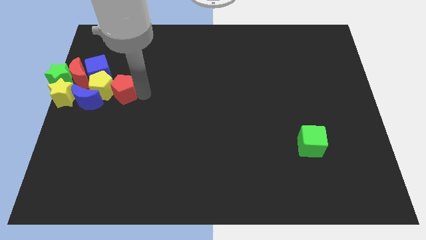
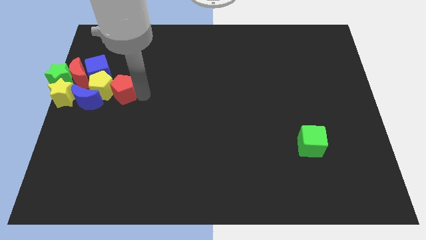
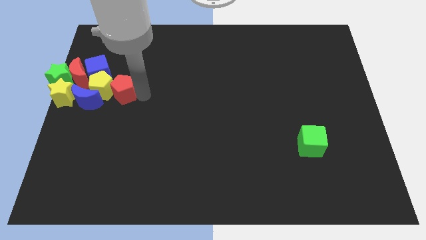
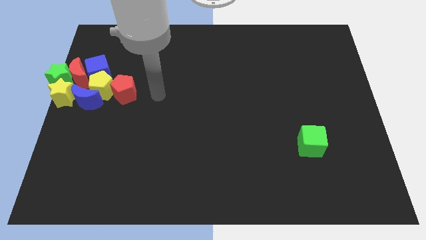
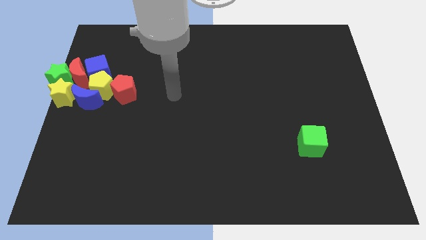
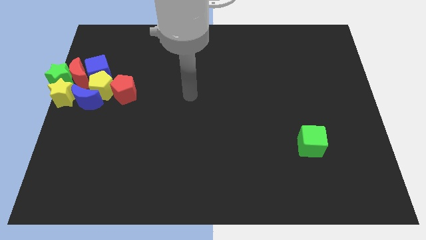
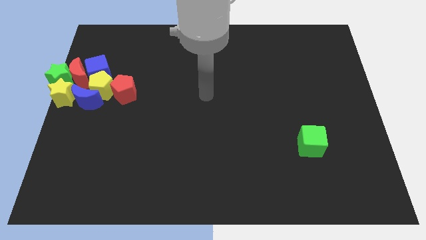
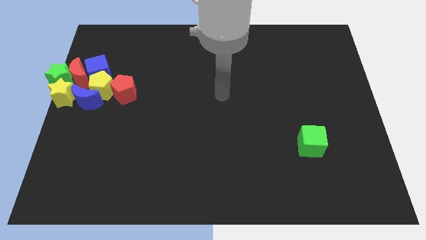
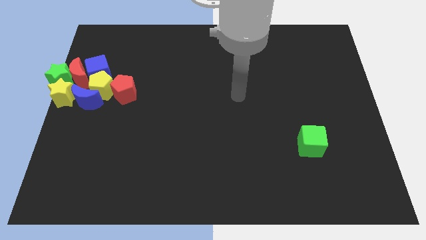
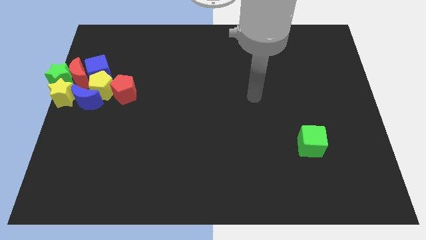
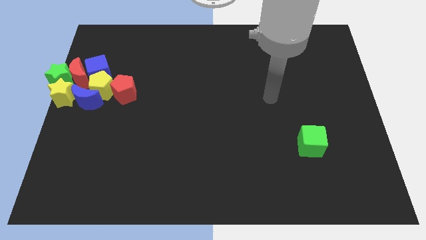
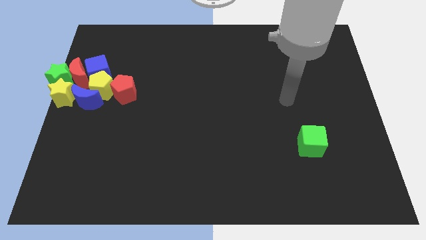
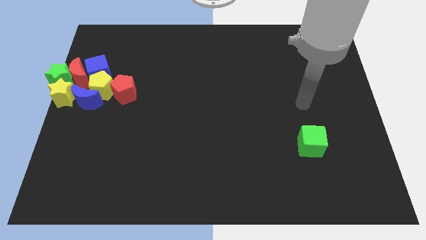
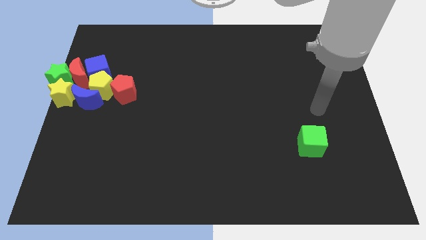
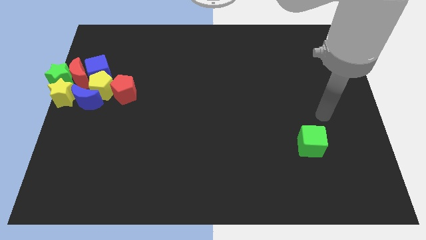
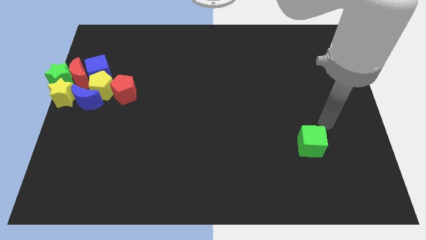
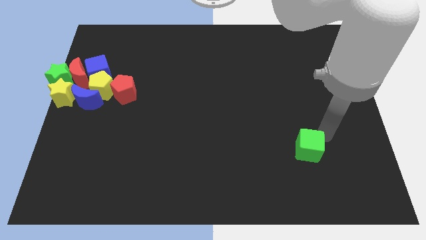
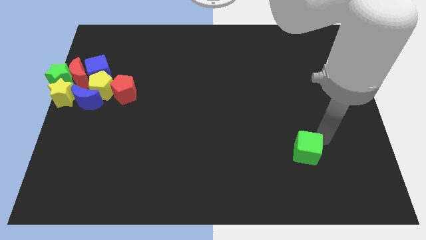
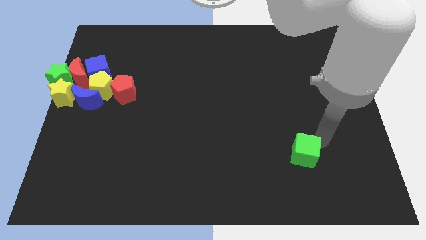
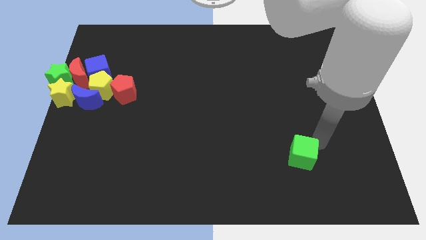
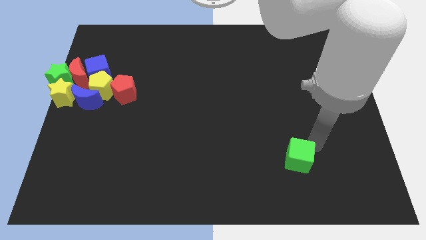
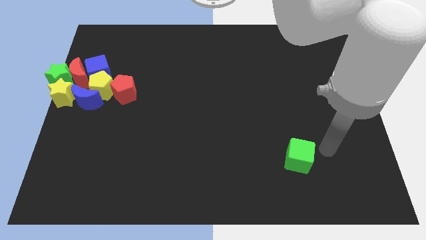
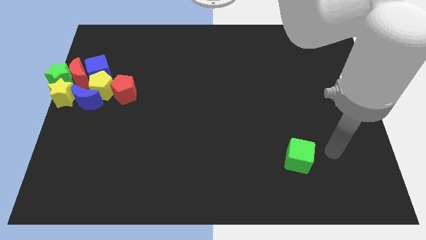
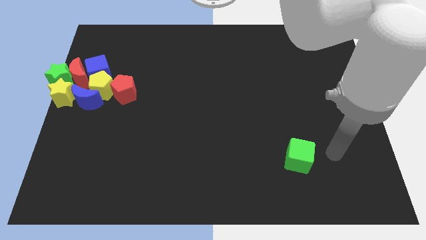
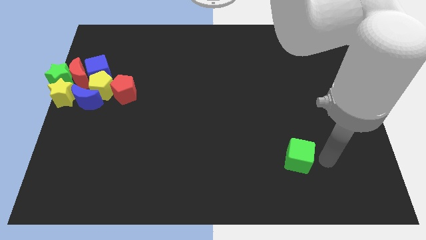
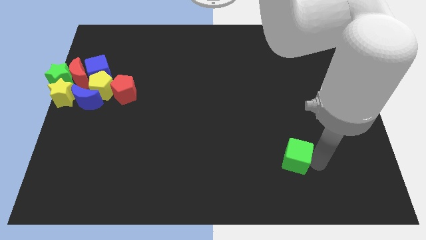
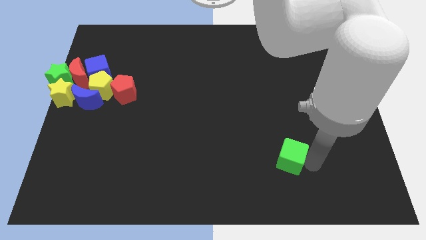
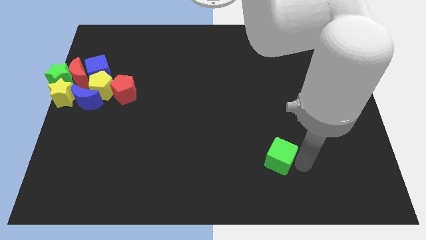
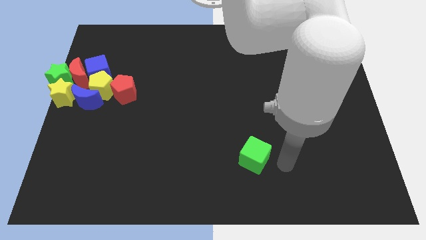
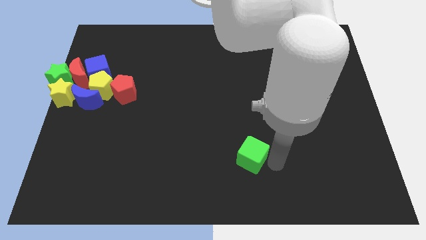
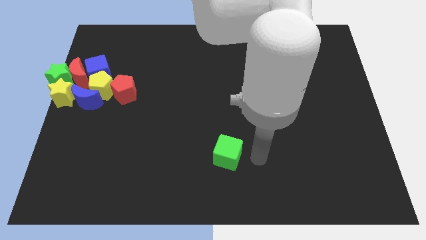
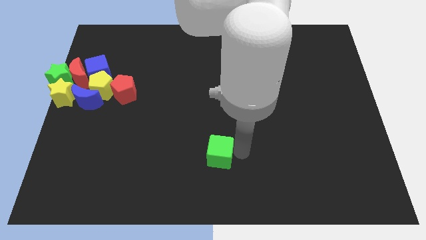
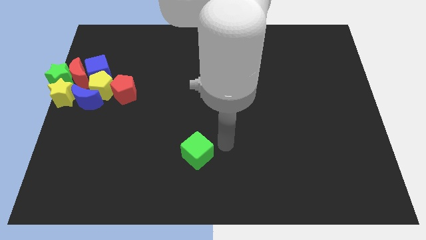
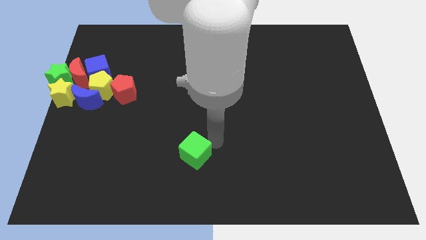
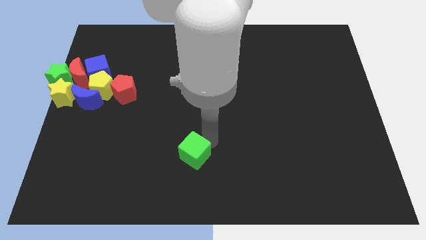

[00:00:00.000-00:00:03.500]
push the green cube to the left side

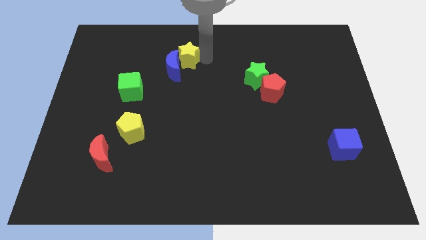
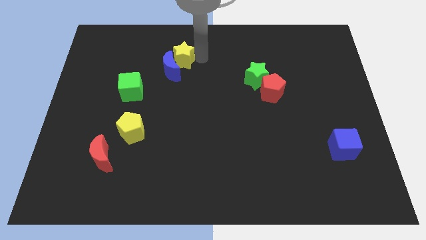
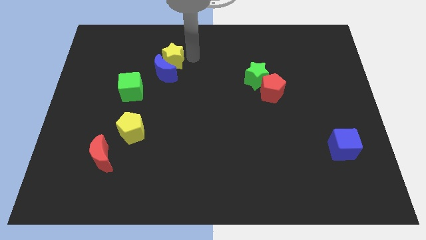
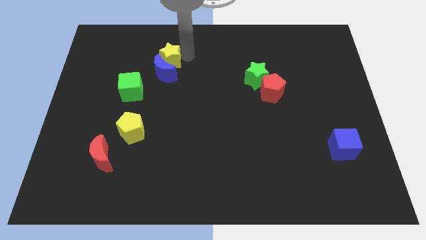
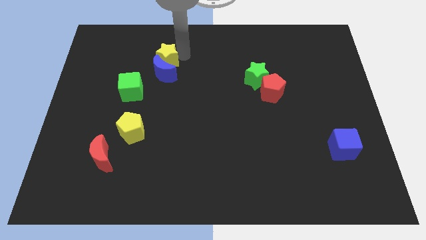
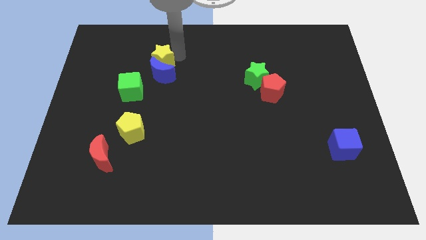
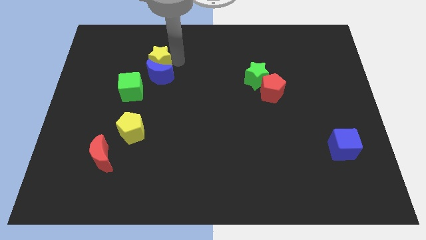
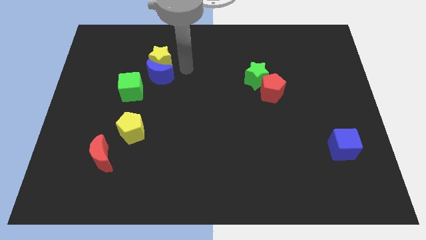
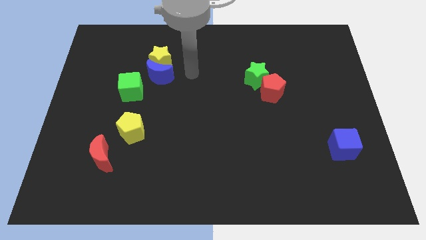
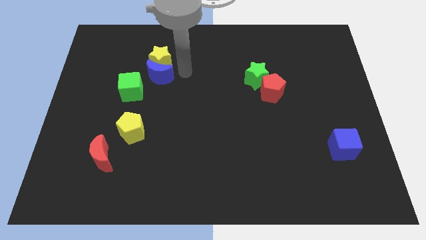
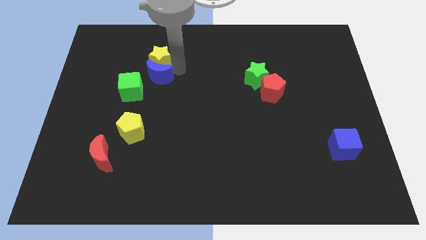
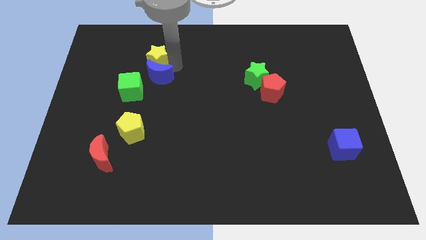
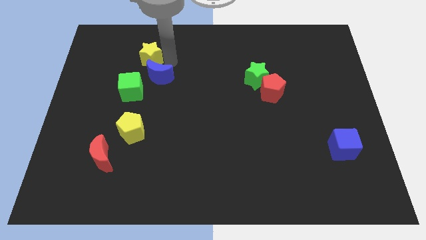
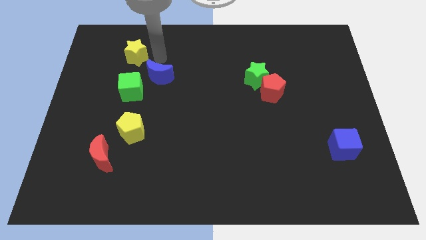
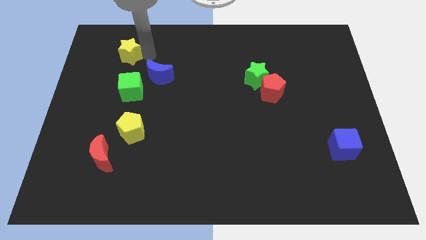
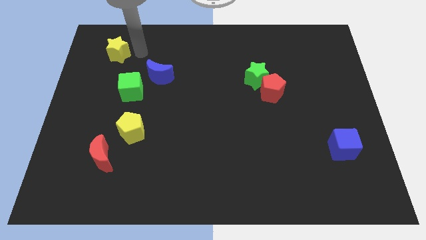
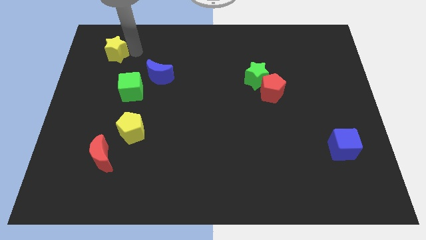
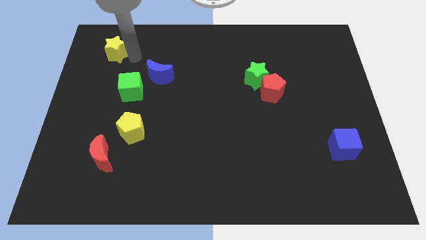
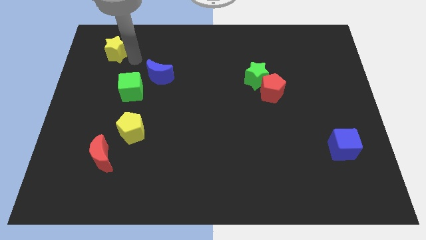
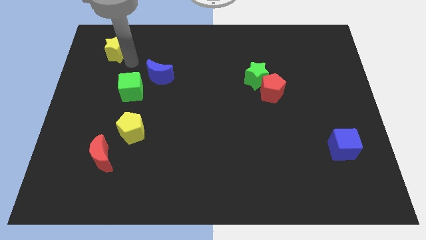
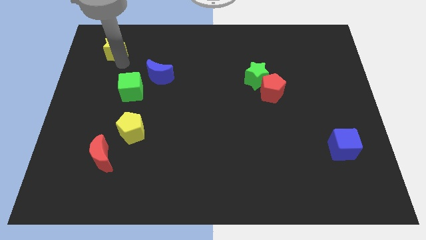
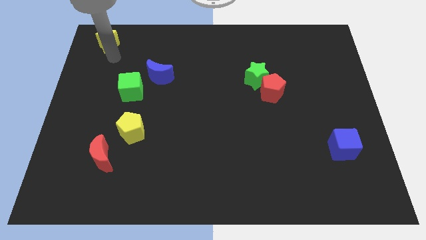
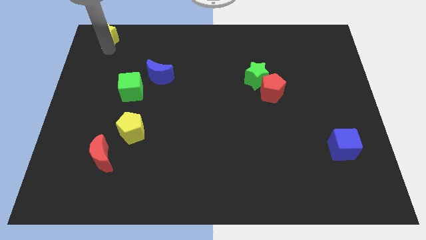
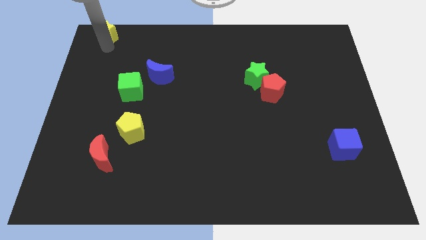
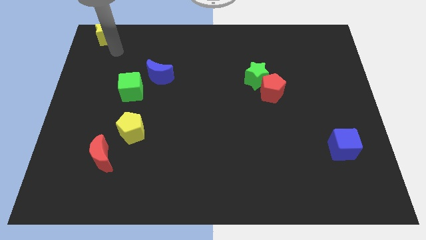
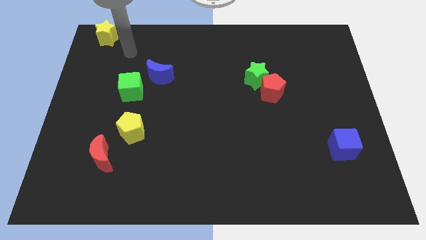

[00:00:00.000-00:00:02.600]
separate yellow star and blue moon

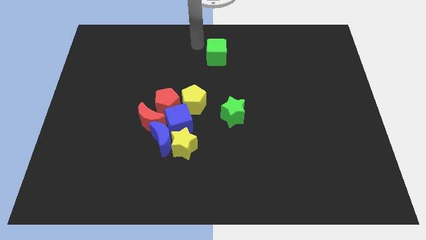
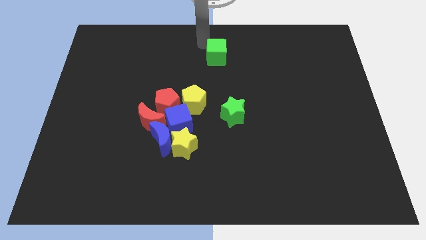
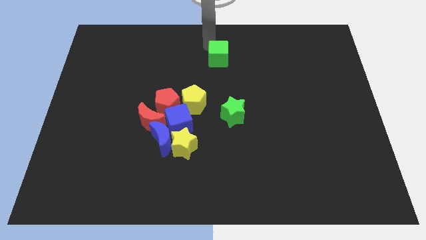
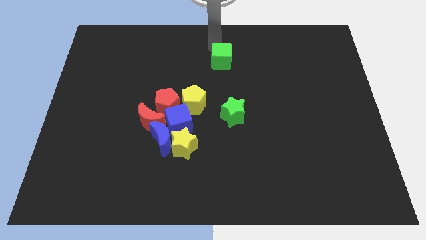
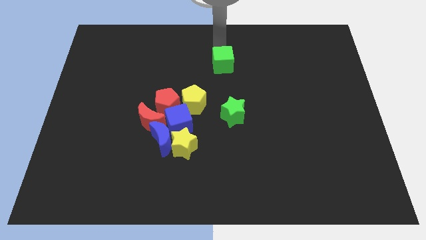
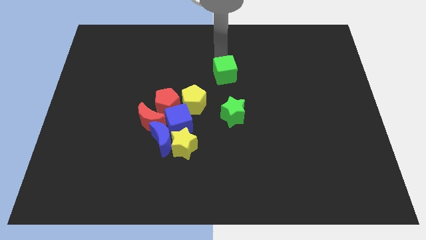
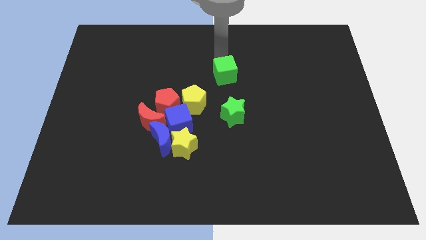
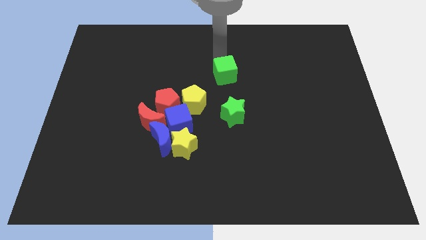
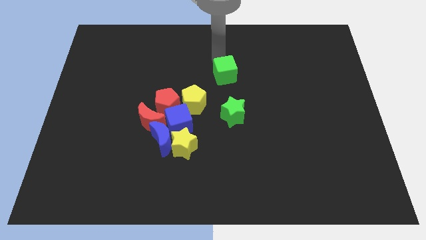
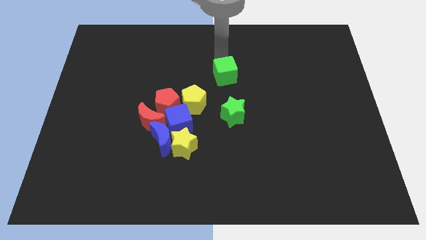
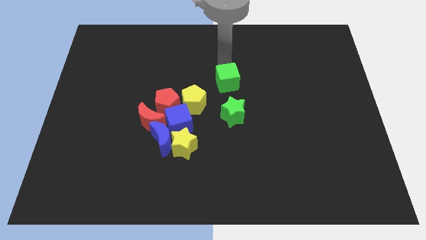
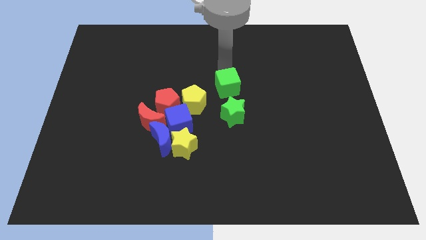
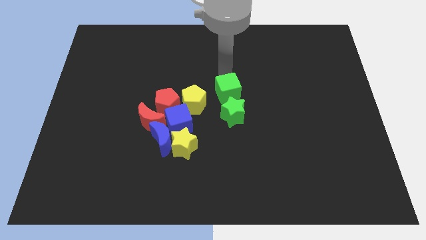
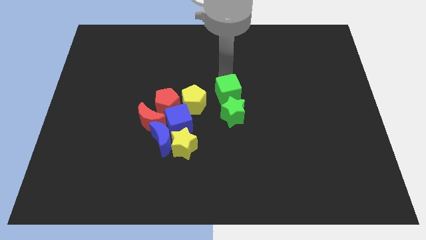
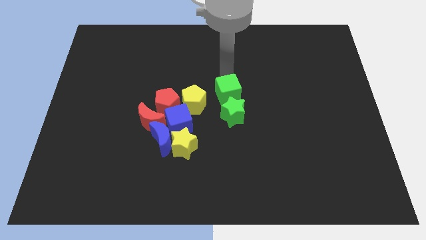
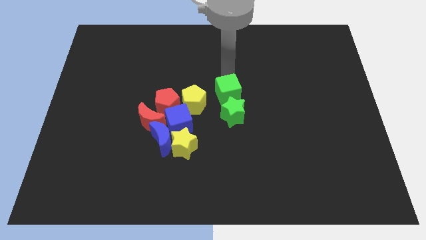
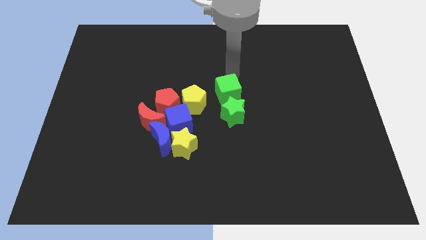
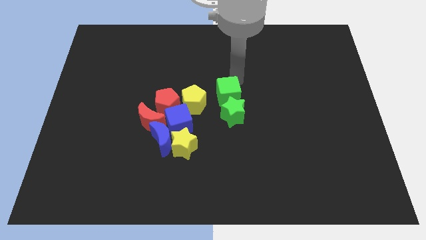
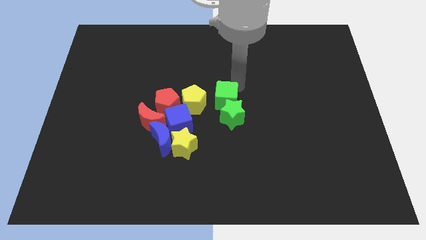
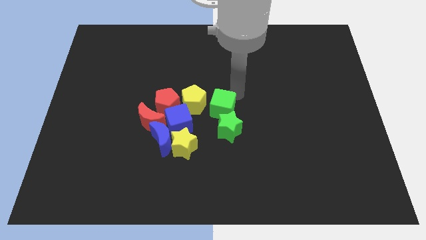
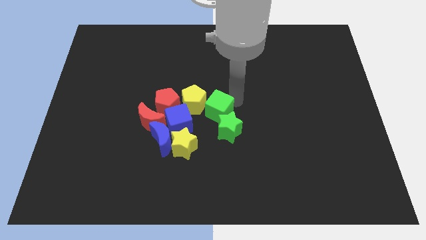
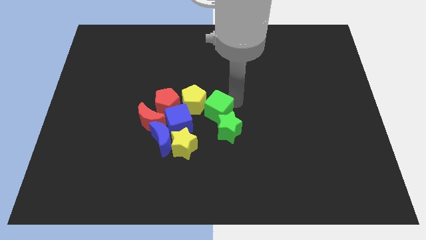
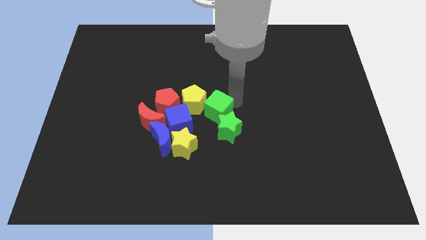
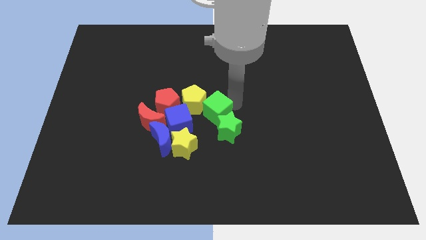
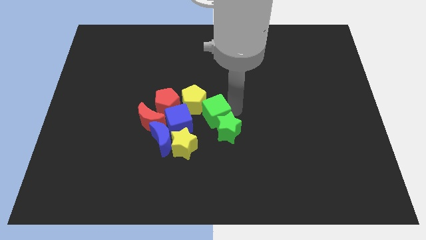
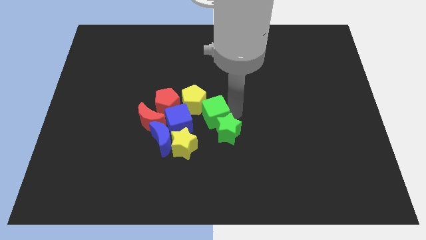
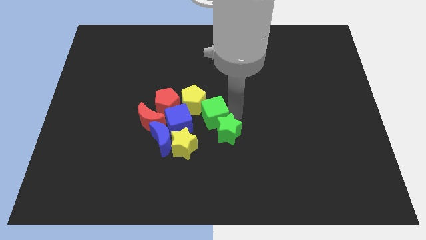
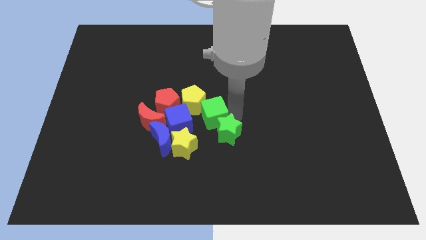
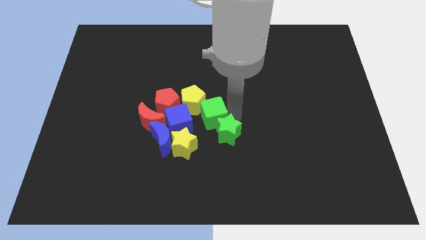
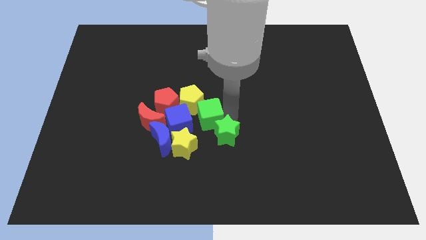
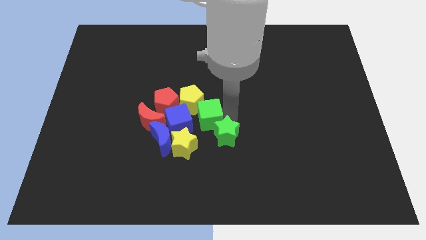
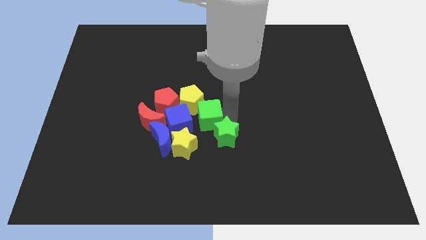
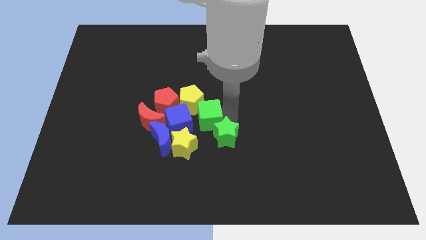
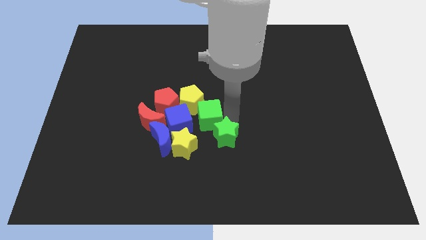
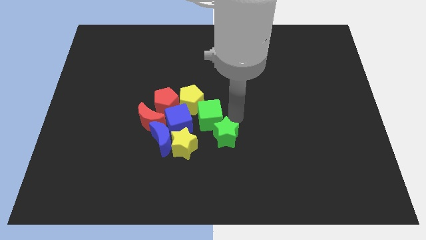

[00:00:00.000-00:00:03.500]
place the green cube diagonally in between the green star and yellow pentagon
